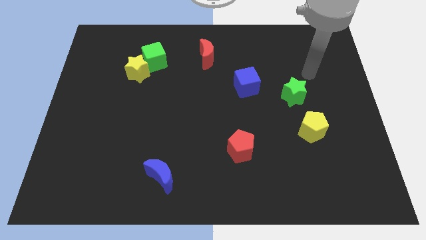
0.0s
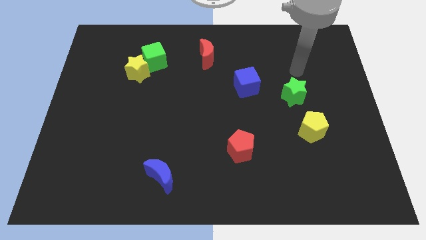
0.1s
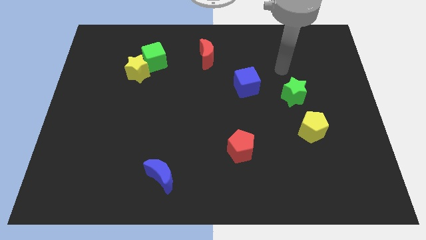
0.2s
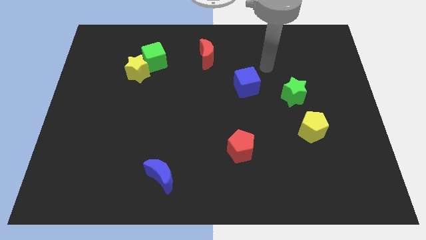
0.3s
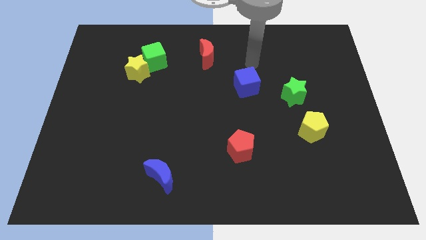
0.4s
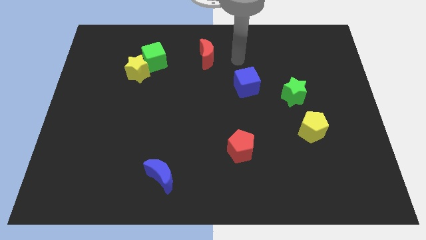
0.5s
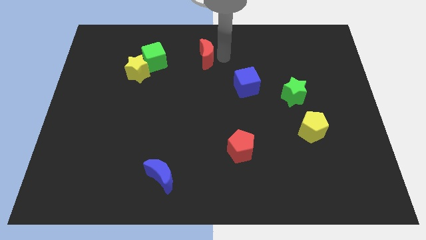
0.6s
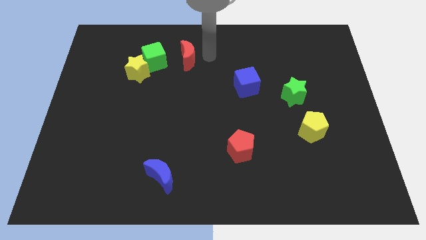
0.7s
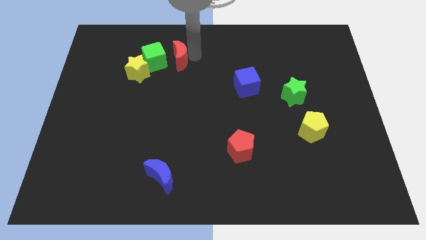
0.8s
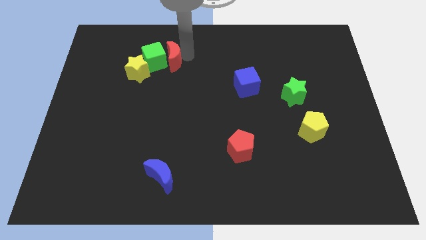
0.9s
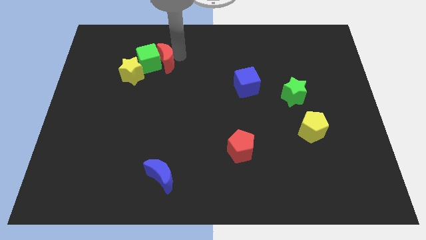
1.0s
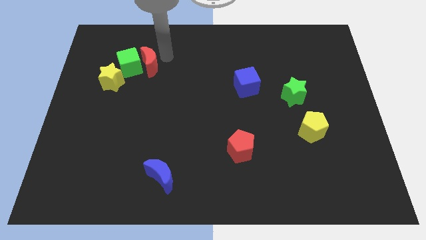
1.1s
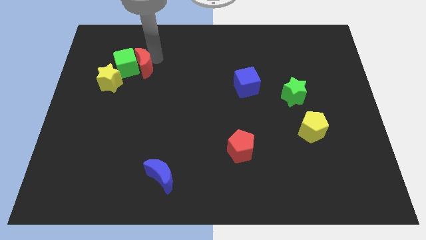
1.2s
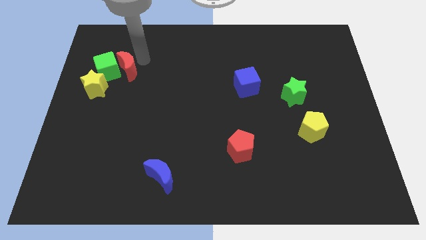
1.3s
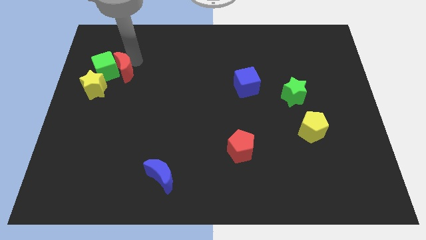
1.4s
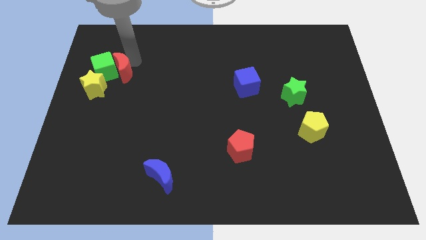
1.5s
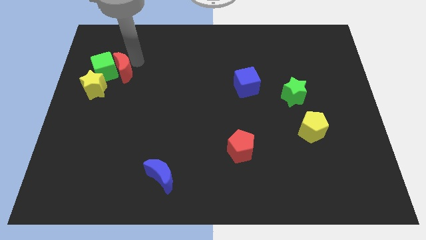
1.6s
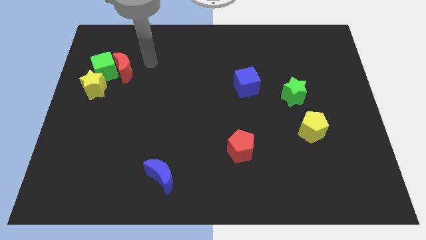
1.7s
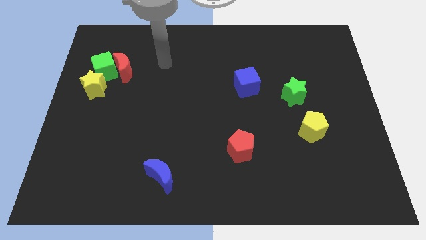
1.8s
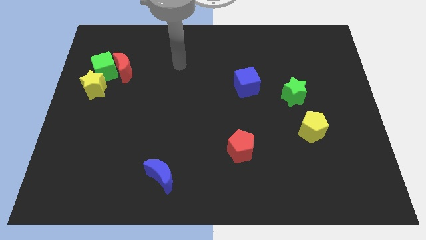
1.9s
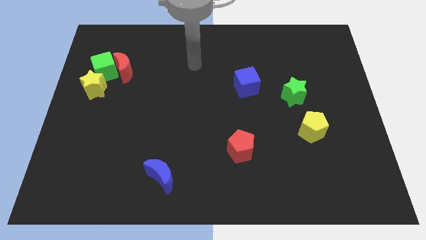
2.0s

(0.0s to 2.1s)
move the red moon close to the green cube

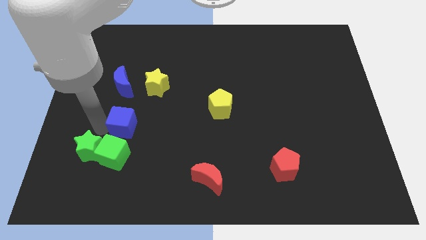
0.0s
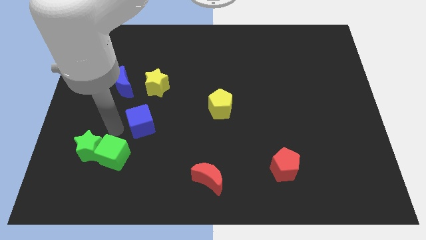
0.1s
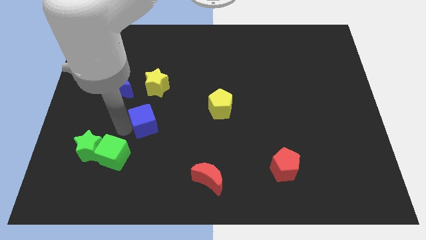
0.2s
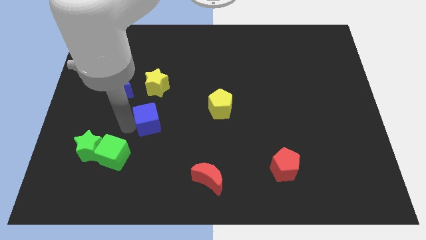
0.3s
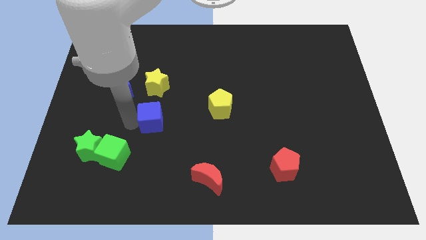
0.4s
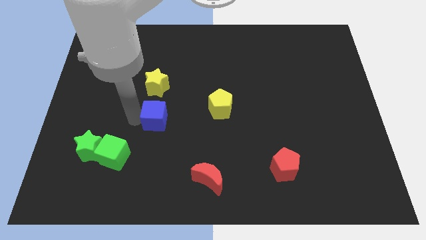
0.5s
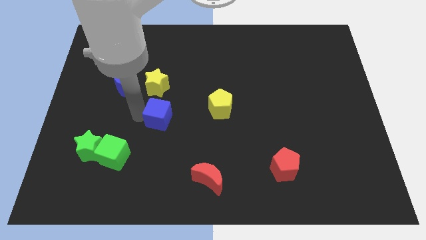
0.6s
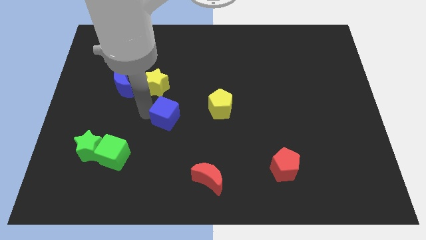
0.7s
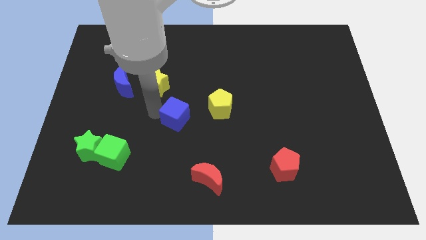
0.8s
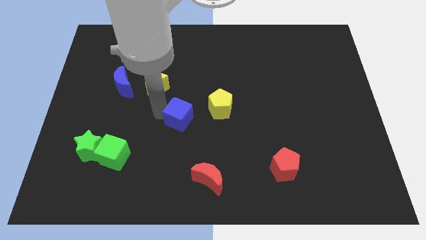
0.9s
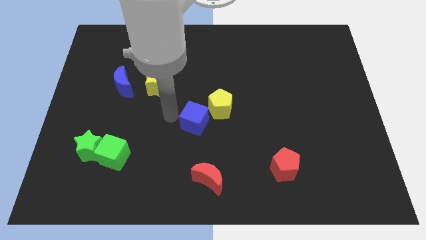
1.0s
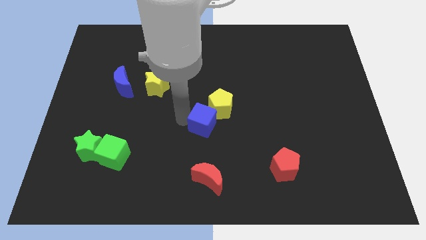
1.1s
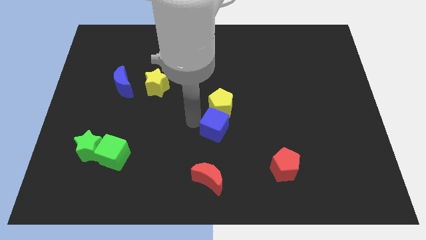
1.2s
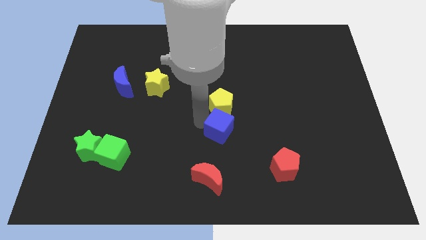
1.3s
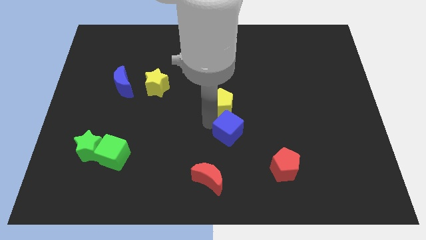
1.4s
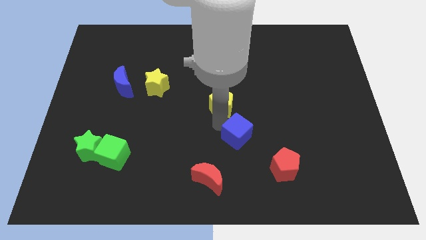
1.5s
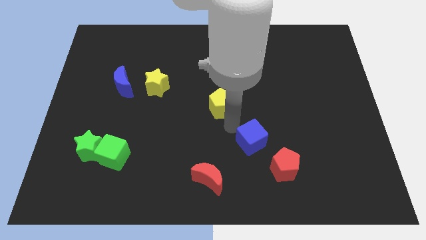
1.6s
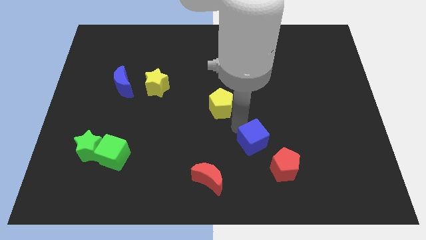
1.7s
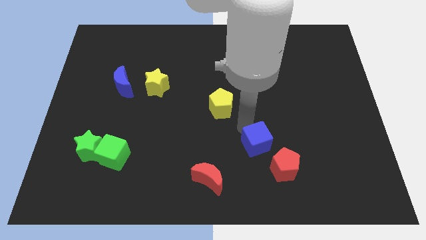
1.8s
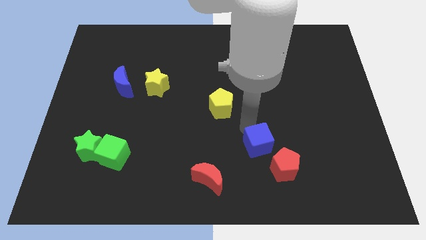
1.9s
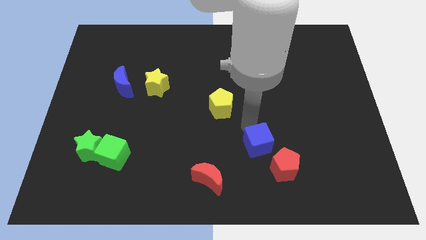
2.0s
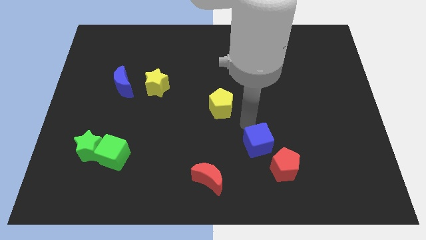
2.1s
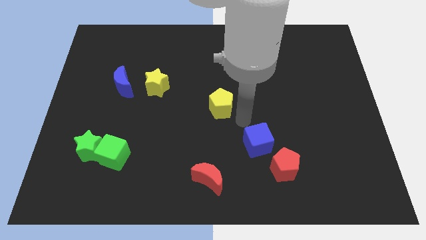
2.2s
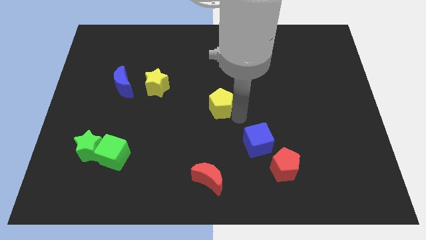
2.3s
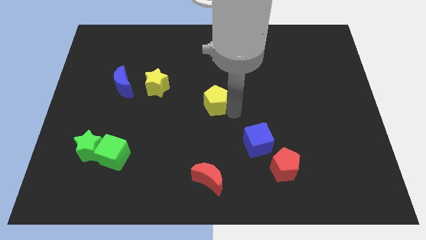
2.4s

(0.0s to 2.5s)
move blue cube top left to the red pentagon

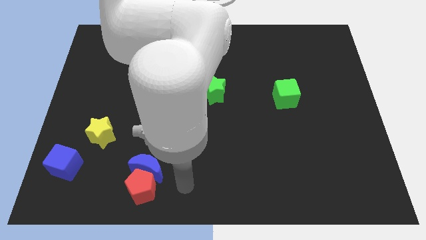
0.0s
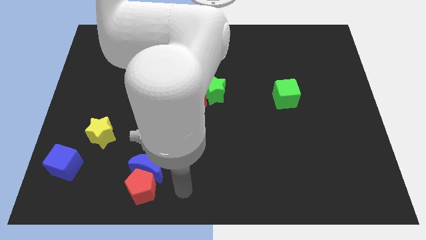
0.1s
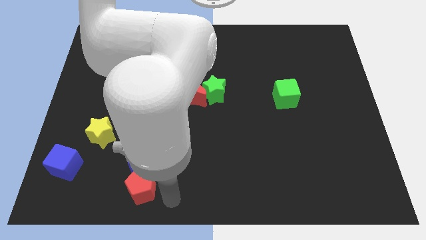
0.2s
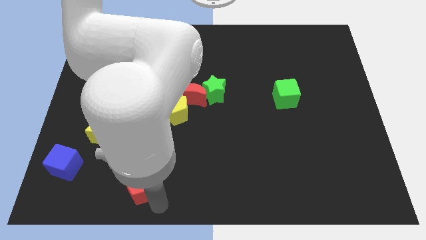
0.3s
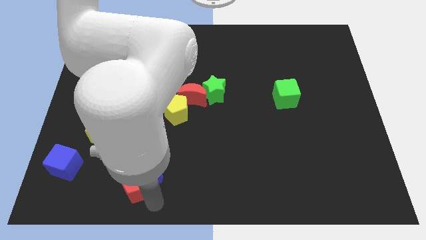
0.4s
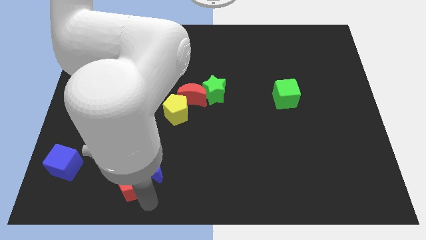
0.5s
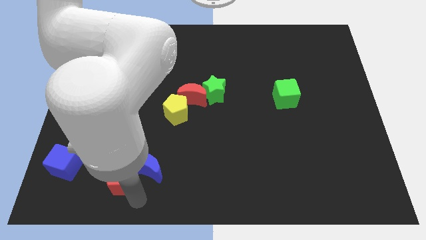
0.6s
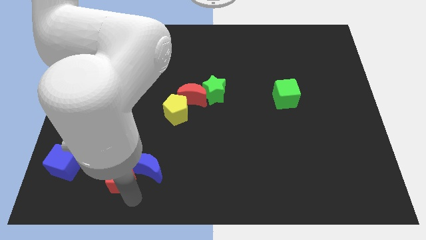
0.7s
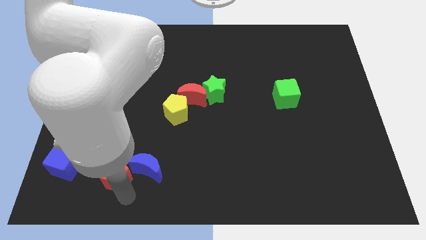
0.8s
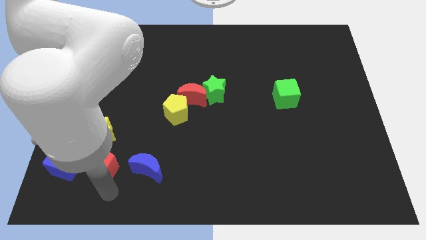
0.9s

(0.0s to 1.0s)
place the red pentagon right to the blue cube

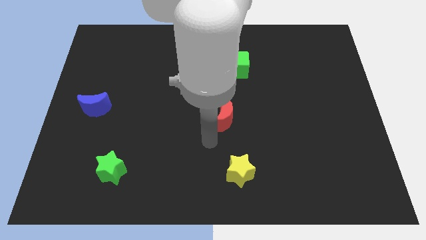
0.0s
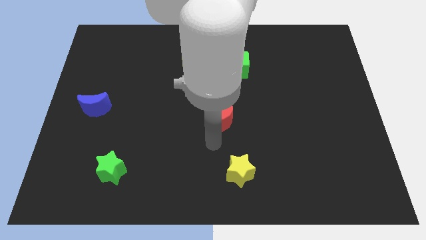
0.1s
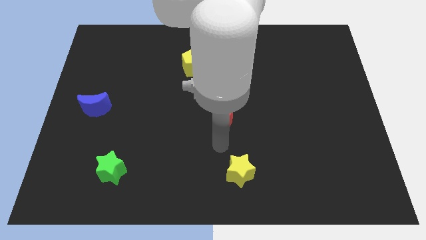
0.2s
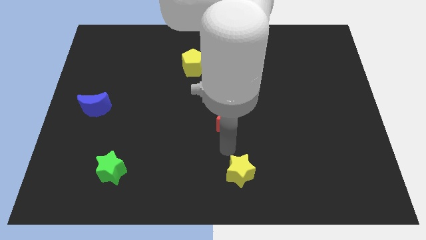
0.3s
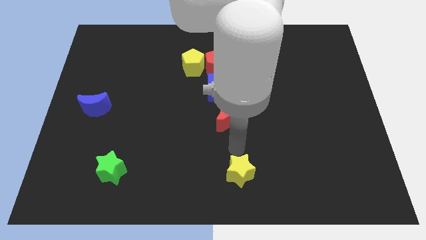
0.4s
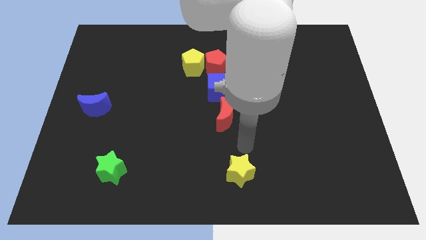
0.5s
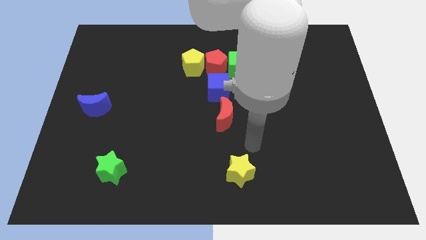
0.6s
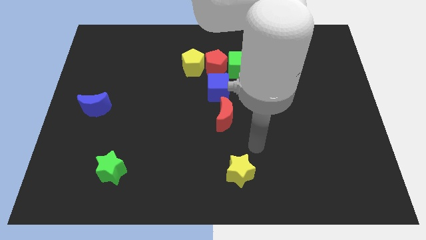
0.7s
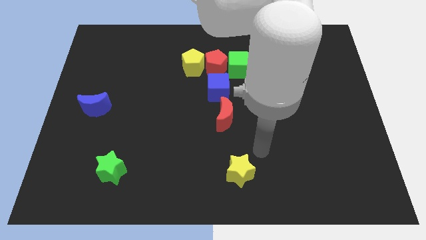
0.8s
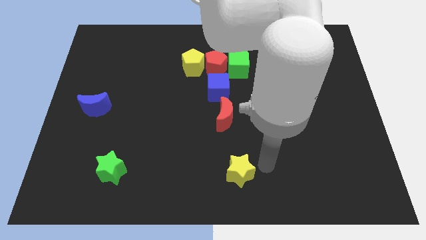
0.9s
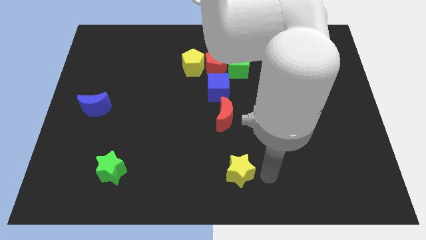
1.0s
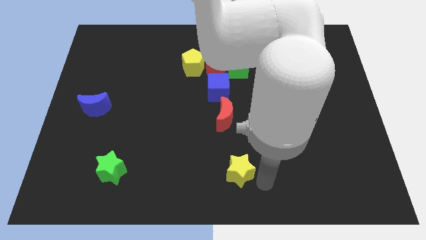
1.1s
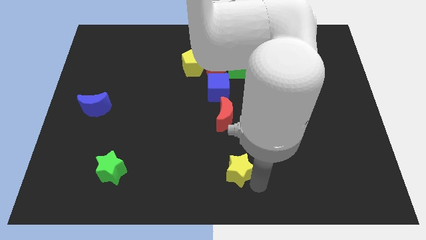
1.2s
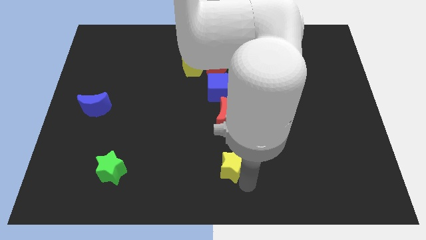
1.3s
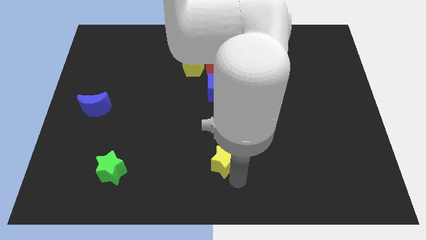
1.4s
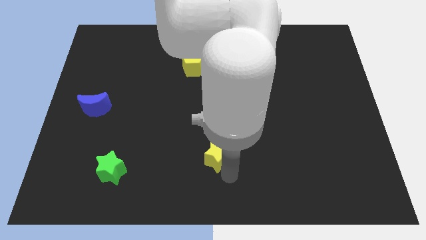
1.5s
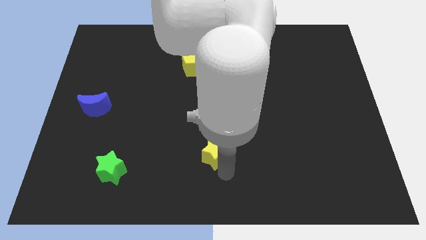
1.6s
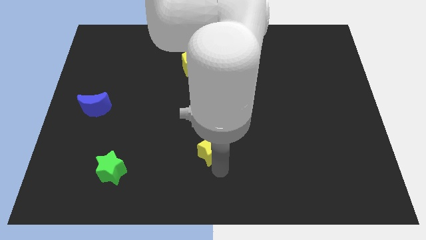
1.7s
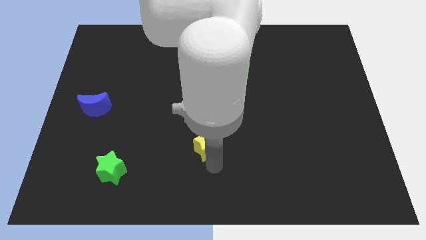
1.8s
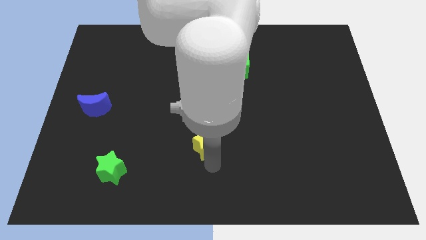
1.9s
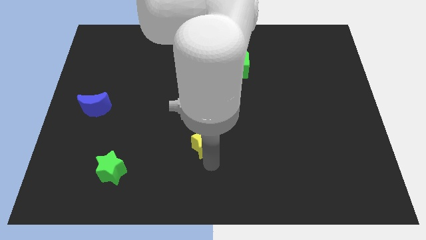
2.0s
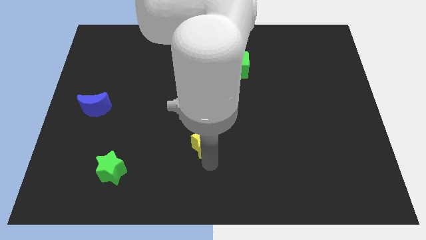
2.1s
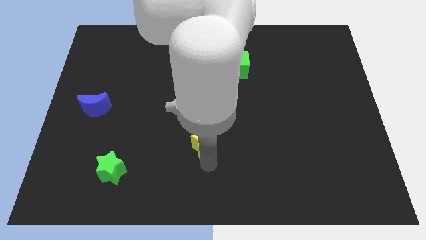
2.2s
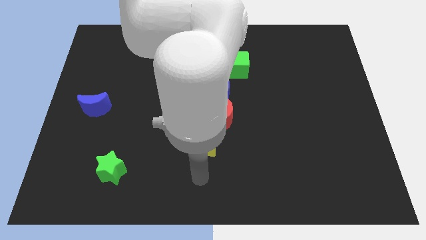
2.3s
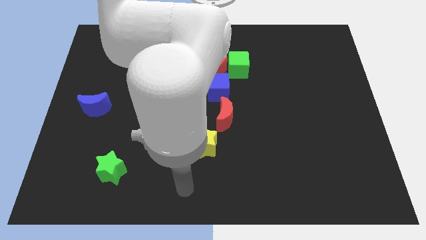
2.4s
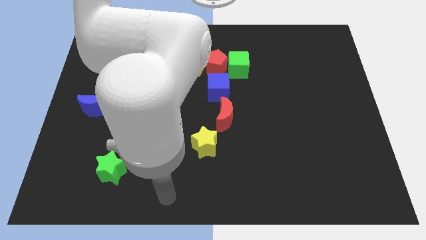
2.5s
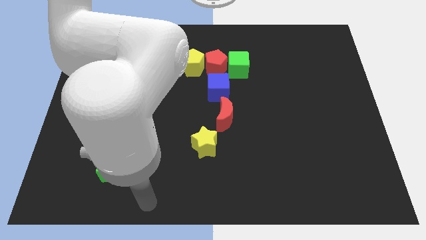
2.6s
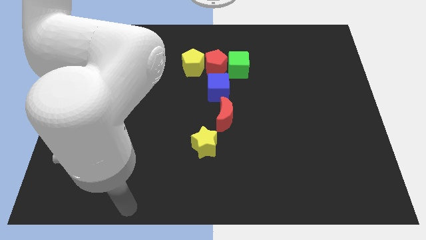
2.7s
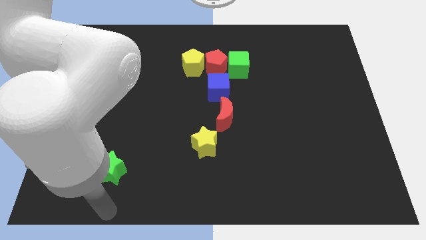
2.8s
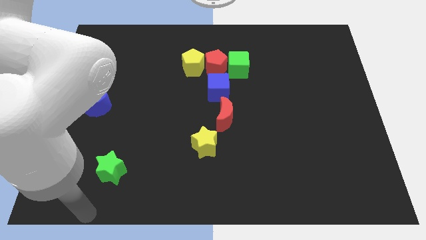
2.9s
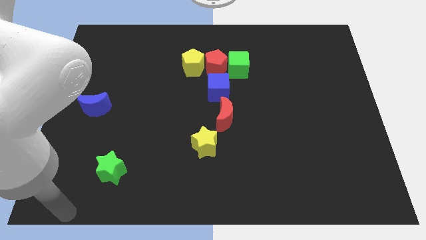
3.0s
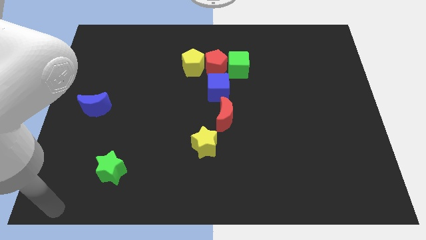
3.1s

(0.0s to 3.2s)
move the yellow star diagonally bottom left to the red crescent

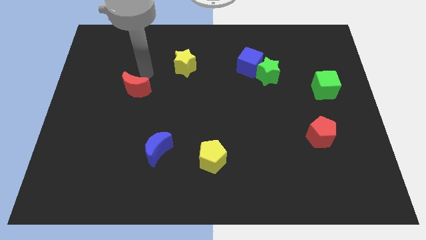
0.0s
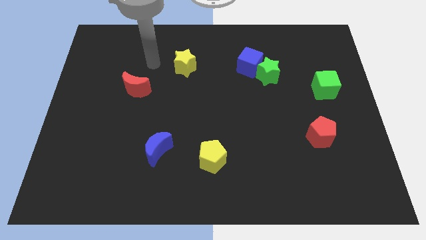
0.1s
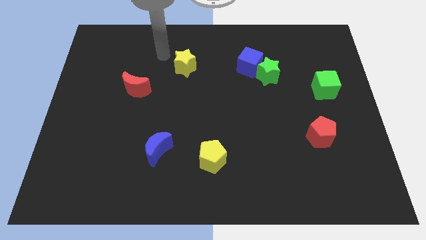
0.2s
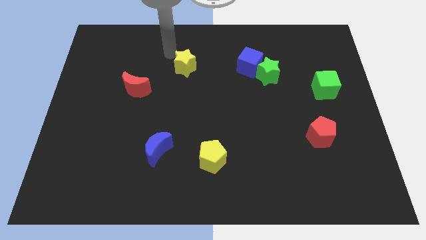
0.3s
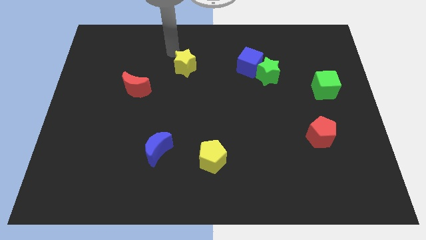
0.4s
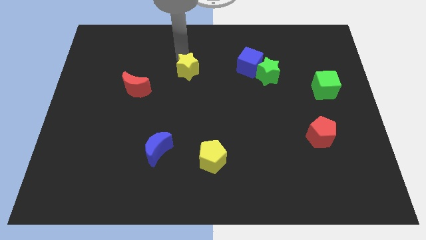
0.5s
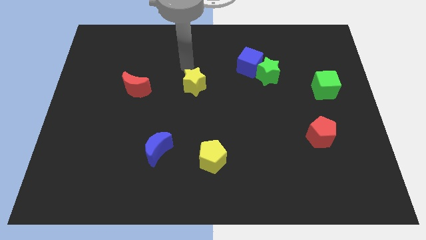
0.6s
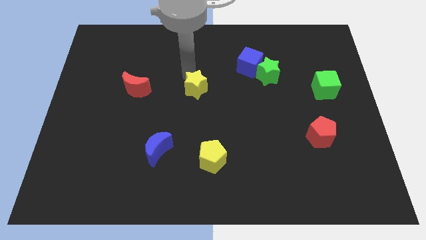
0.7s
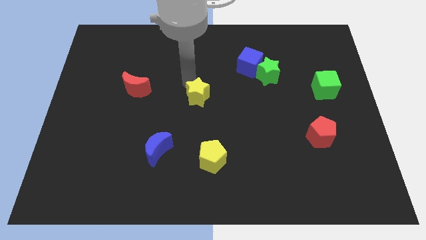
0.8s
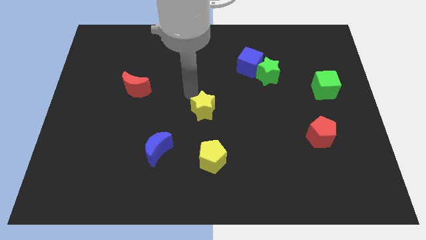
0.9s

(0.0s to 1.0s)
move yellow star towards yellow pentagon
